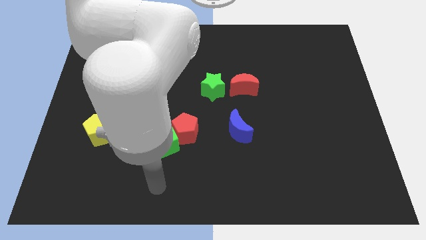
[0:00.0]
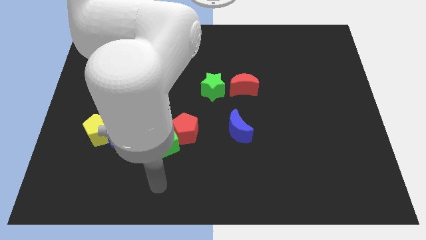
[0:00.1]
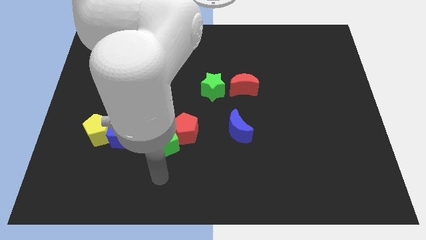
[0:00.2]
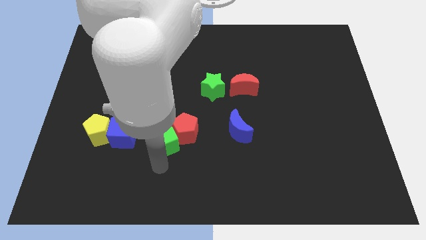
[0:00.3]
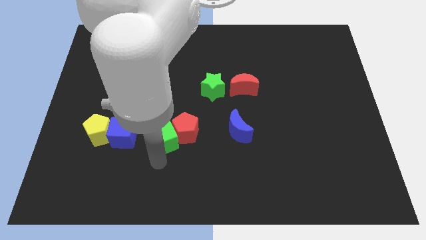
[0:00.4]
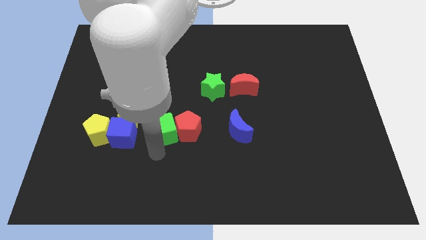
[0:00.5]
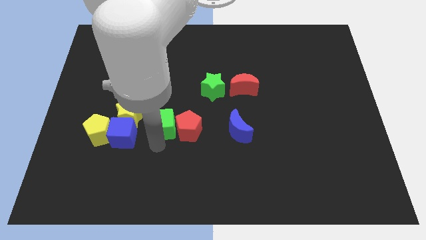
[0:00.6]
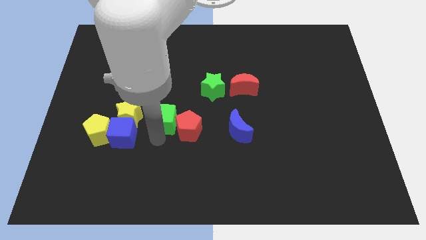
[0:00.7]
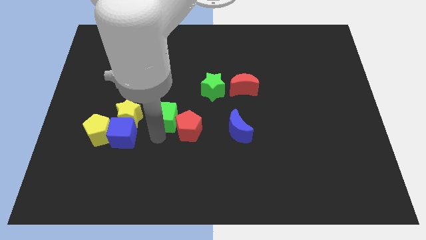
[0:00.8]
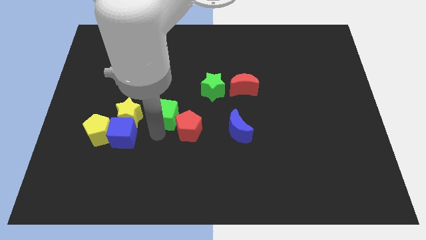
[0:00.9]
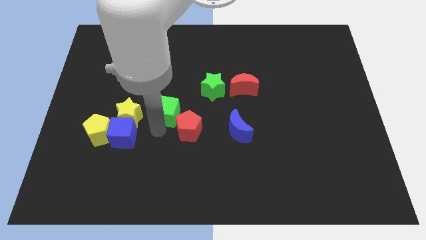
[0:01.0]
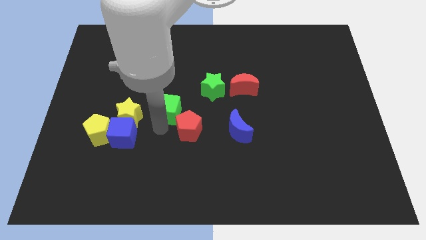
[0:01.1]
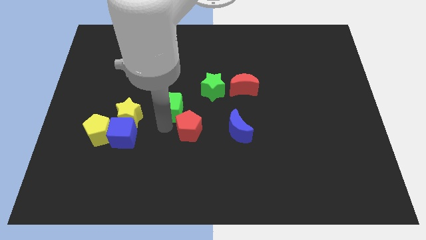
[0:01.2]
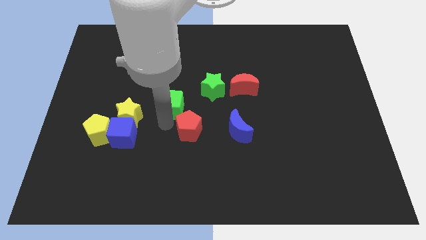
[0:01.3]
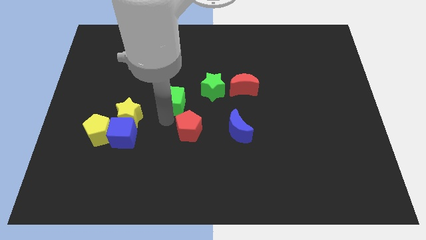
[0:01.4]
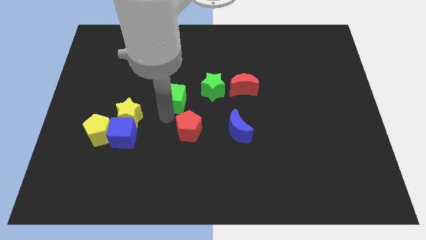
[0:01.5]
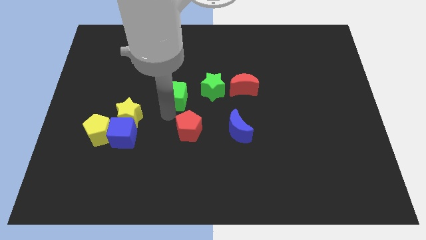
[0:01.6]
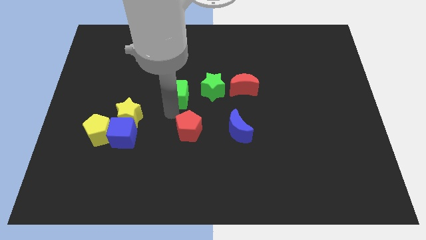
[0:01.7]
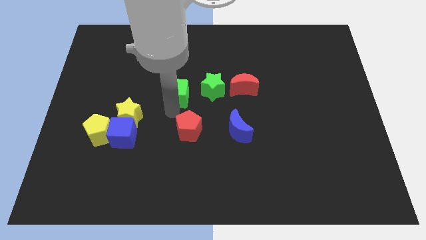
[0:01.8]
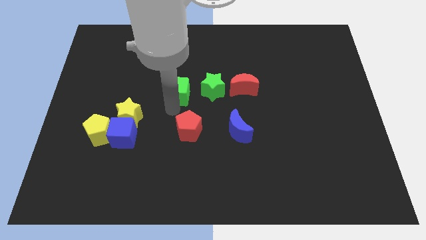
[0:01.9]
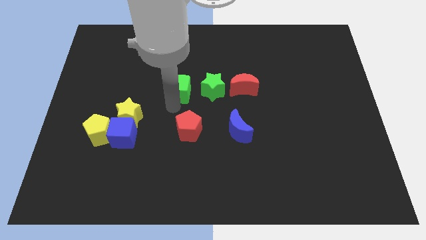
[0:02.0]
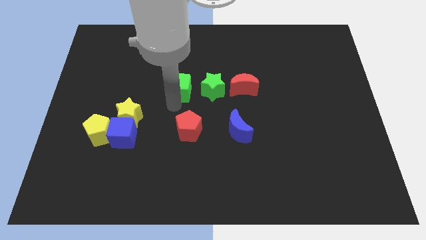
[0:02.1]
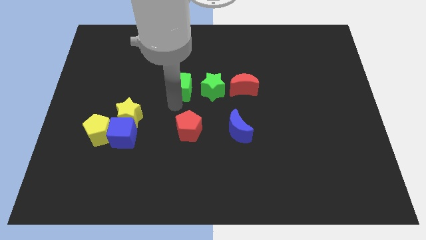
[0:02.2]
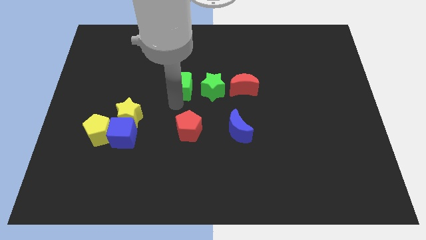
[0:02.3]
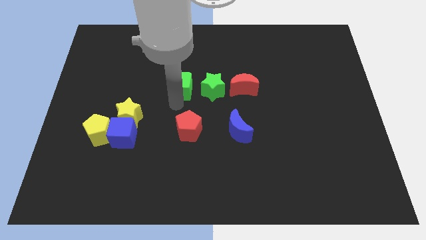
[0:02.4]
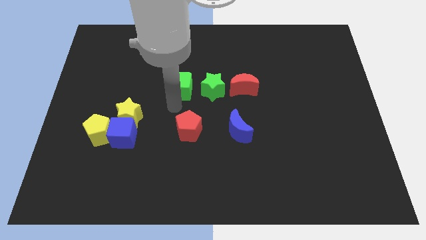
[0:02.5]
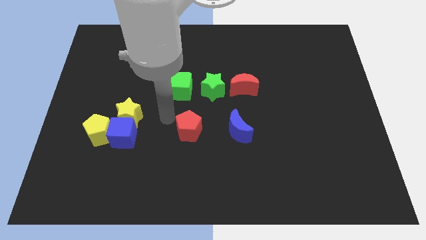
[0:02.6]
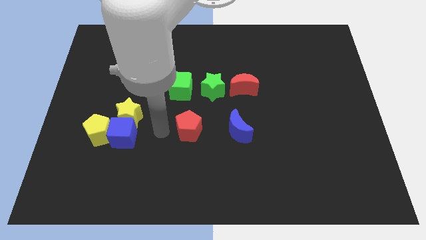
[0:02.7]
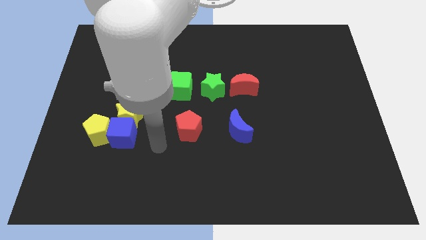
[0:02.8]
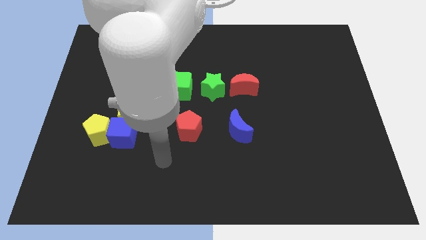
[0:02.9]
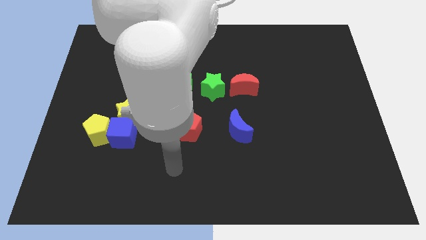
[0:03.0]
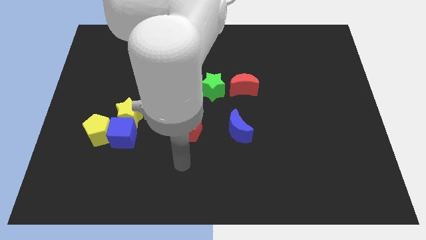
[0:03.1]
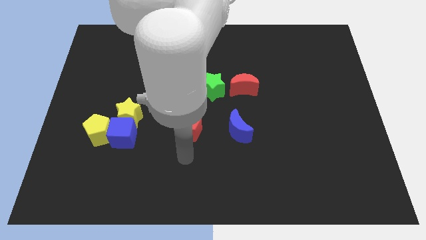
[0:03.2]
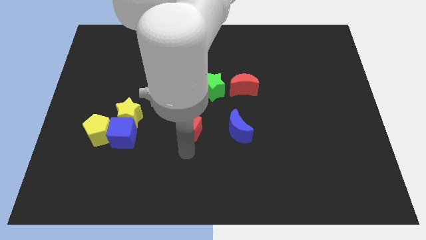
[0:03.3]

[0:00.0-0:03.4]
move the green cube diagonally top left to the red pentagon

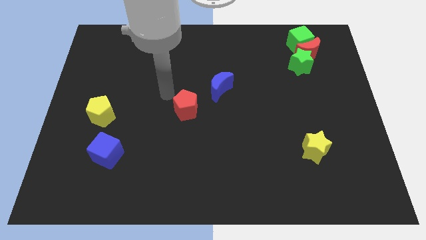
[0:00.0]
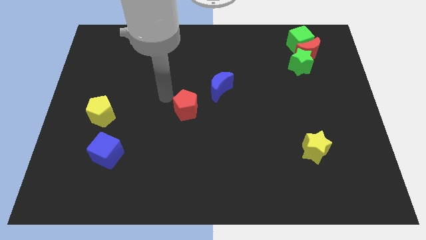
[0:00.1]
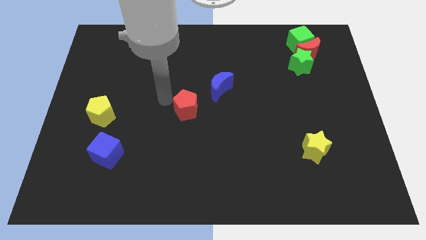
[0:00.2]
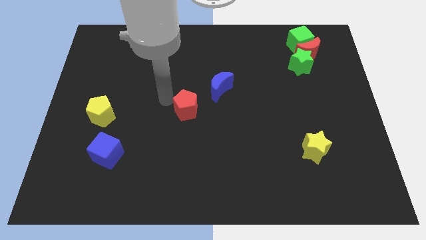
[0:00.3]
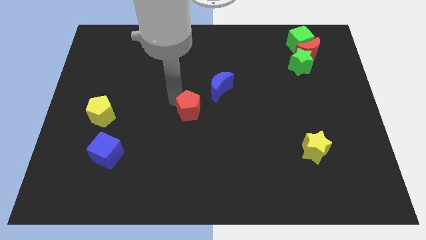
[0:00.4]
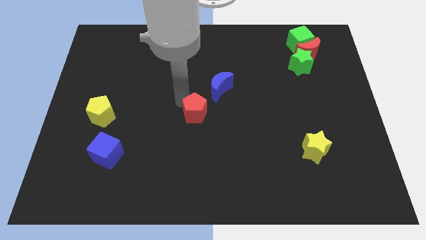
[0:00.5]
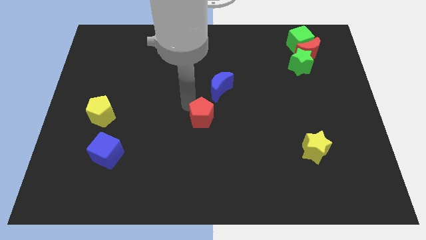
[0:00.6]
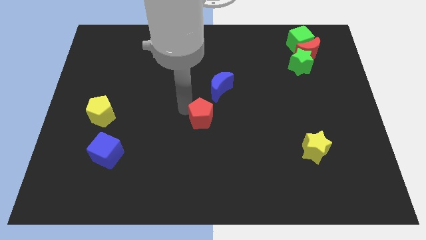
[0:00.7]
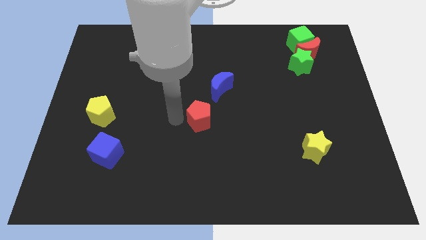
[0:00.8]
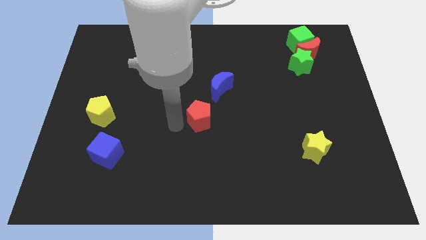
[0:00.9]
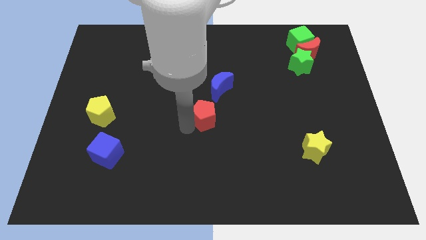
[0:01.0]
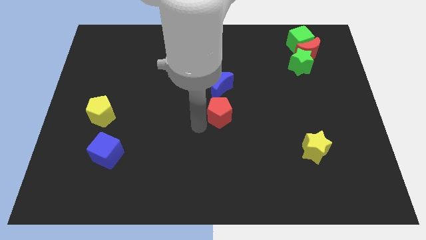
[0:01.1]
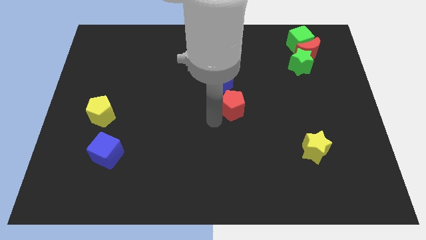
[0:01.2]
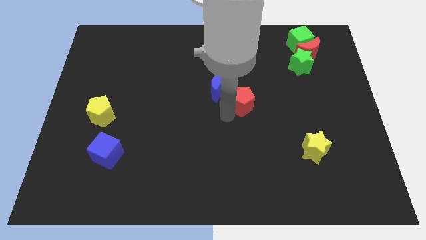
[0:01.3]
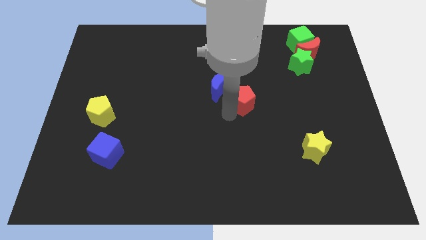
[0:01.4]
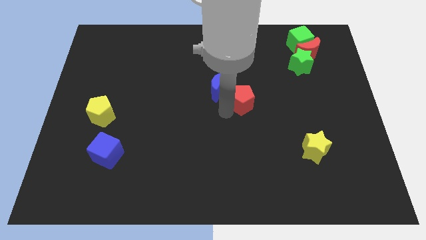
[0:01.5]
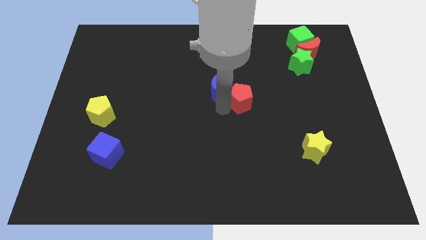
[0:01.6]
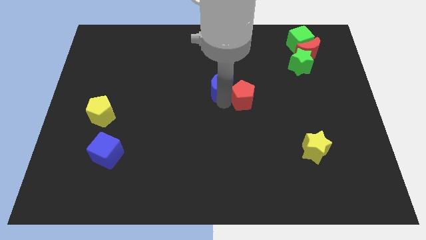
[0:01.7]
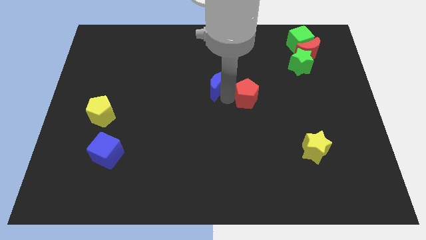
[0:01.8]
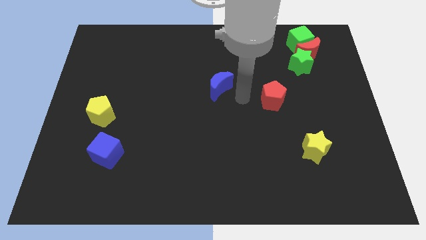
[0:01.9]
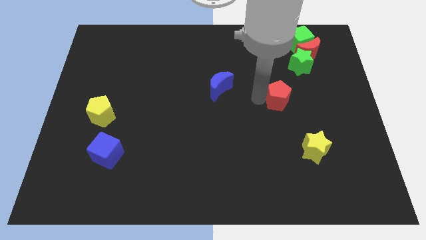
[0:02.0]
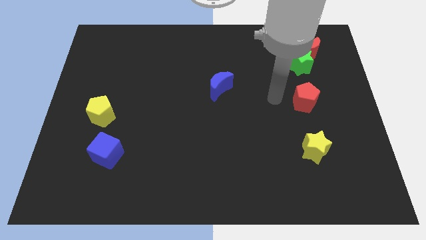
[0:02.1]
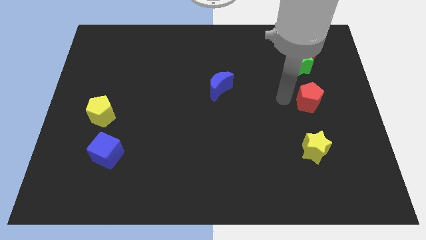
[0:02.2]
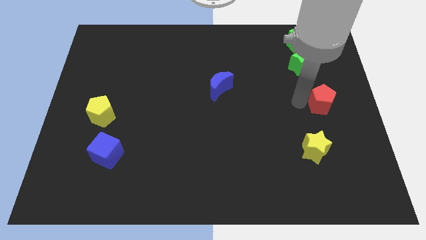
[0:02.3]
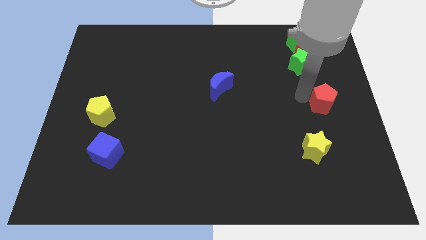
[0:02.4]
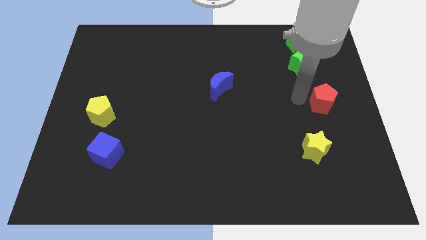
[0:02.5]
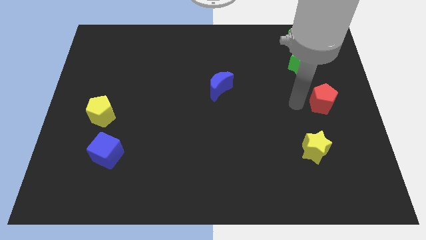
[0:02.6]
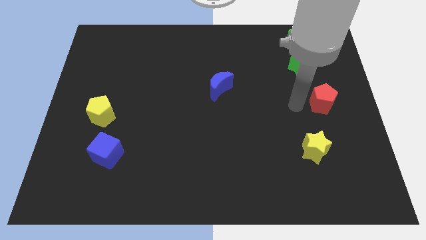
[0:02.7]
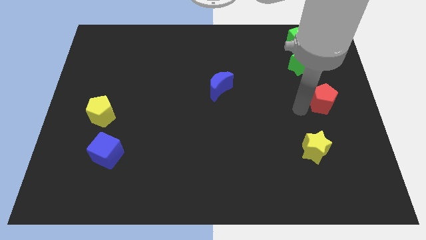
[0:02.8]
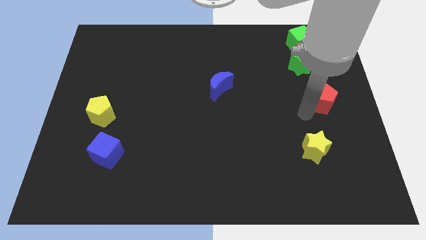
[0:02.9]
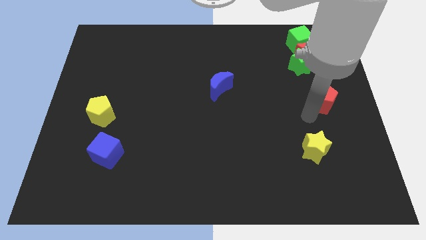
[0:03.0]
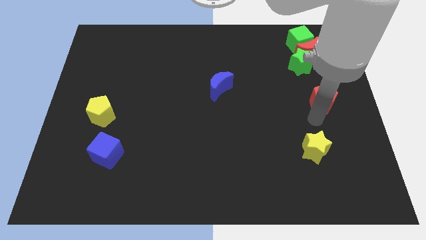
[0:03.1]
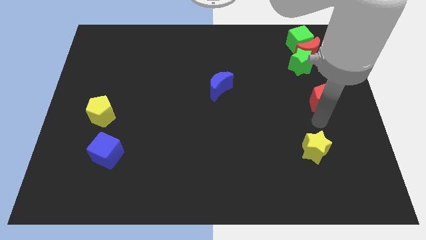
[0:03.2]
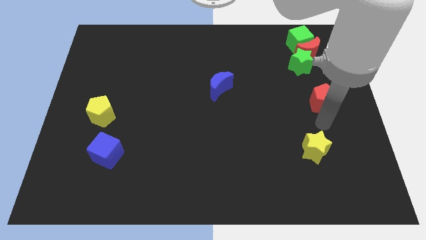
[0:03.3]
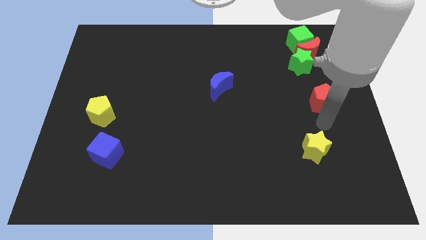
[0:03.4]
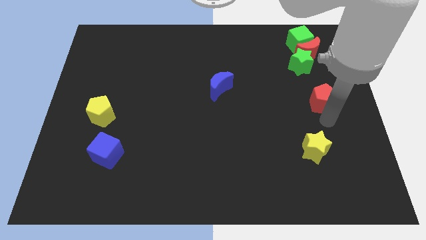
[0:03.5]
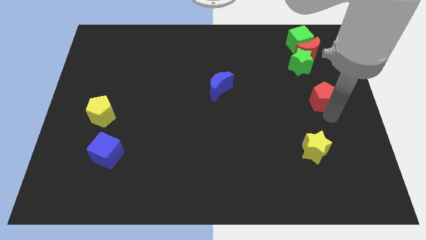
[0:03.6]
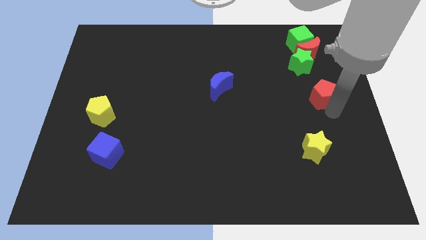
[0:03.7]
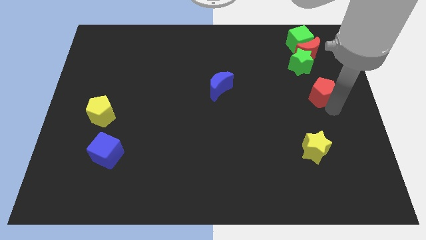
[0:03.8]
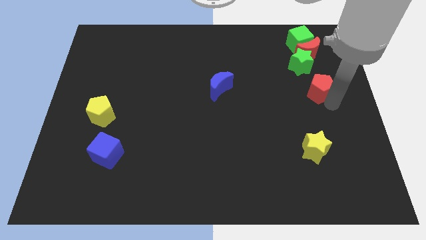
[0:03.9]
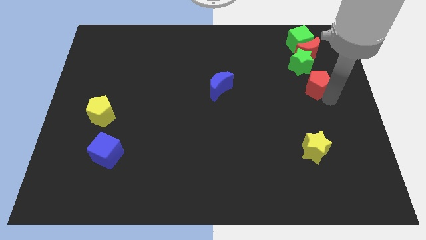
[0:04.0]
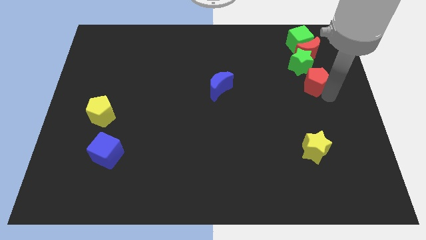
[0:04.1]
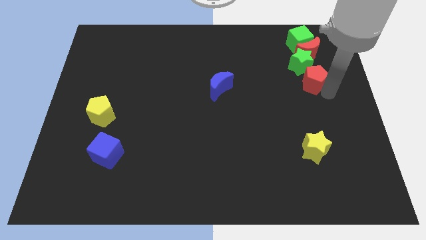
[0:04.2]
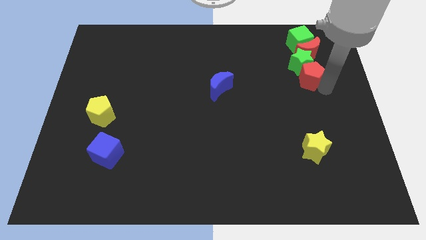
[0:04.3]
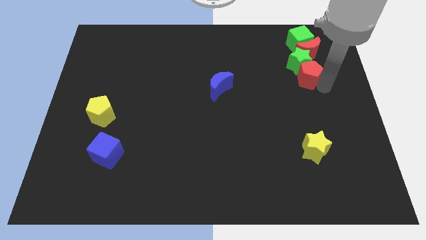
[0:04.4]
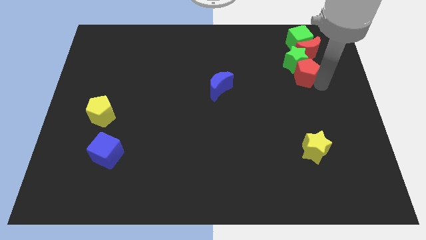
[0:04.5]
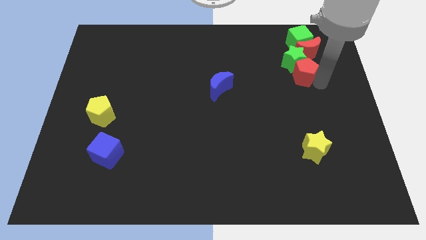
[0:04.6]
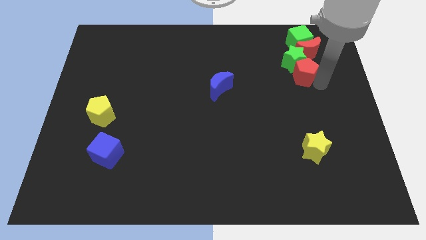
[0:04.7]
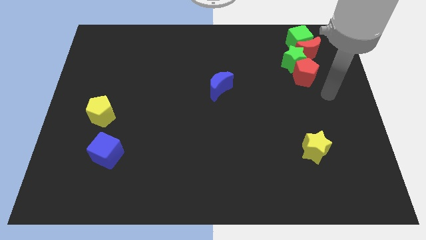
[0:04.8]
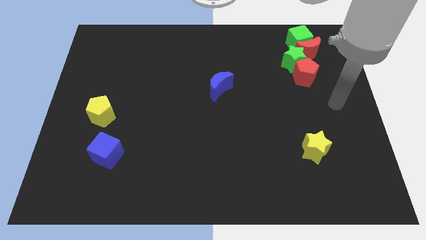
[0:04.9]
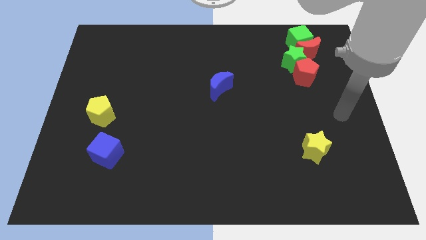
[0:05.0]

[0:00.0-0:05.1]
move the red pentagon to the bottom of the green star

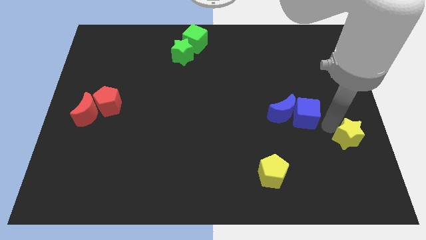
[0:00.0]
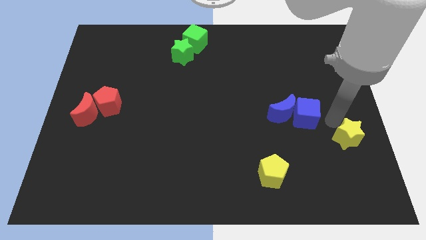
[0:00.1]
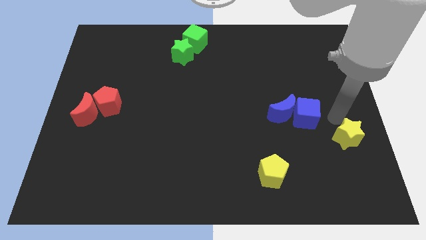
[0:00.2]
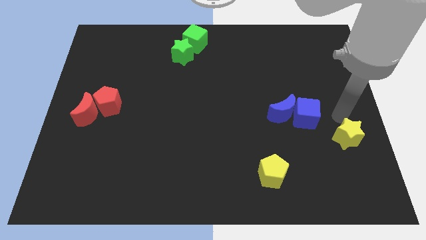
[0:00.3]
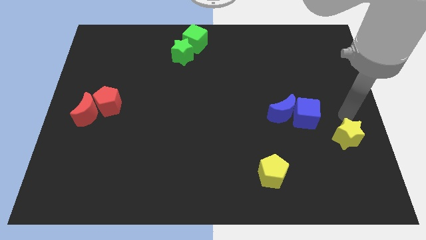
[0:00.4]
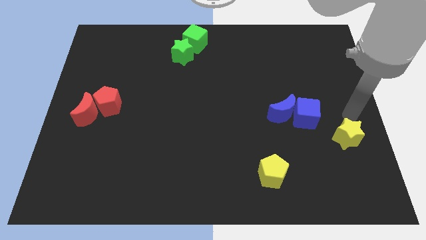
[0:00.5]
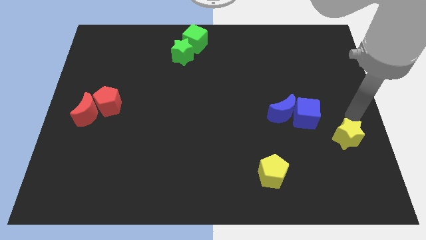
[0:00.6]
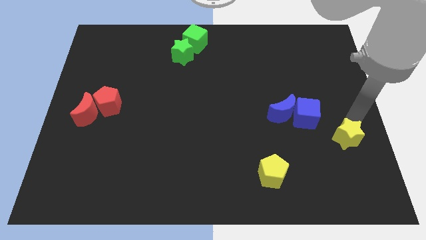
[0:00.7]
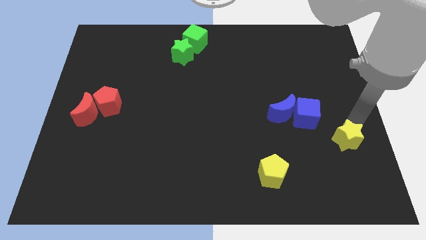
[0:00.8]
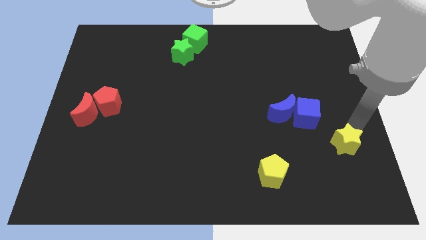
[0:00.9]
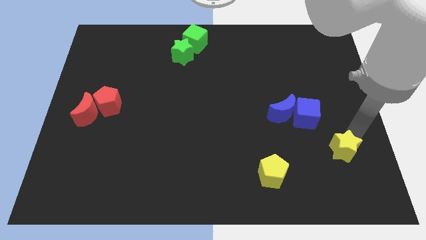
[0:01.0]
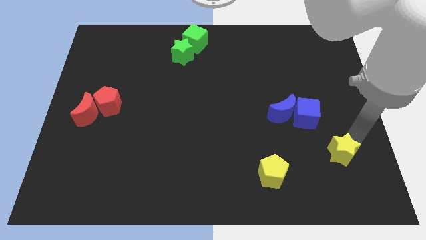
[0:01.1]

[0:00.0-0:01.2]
push the yellow star slightly to the bottom side
